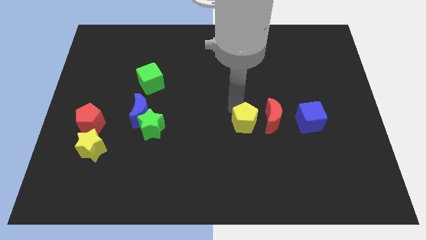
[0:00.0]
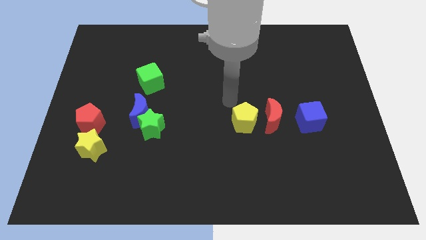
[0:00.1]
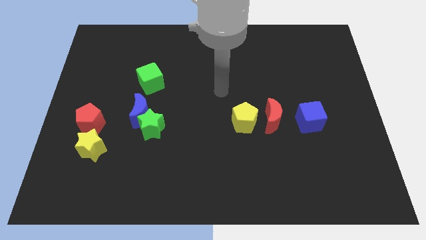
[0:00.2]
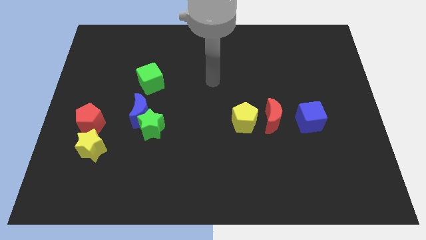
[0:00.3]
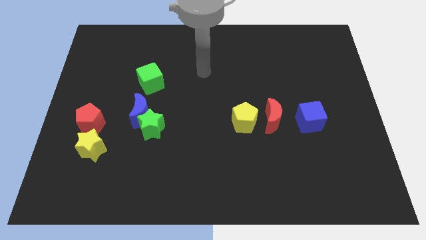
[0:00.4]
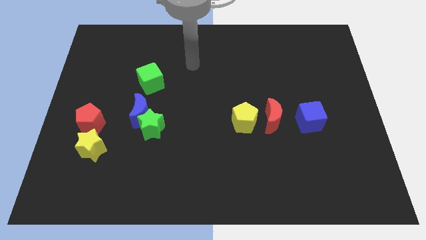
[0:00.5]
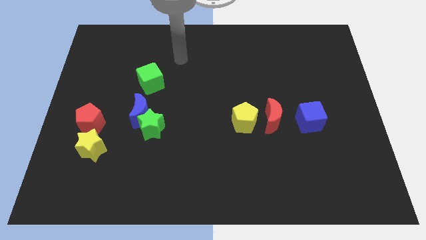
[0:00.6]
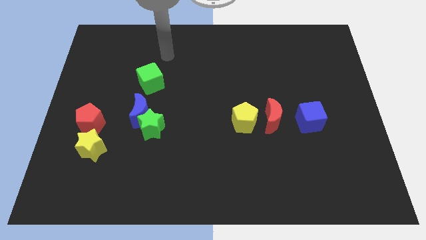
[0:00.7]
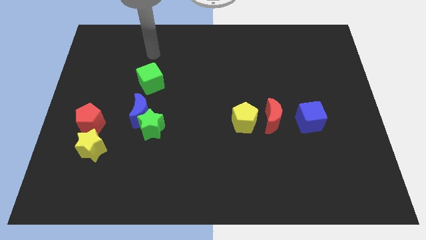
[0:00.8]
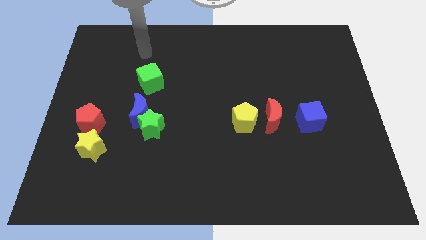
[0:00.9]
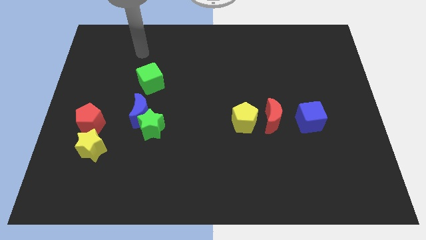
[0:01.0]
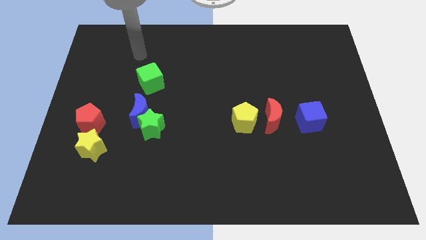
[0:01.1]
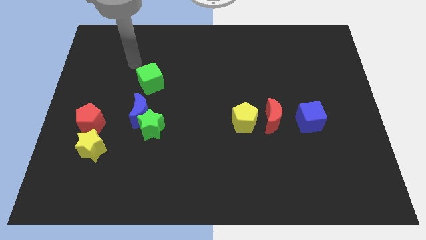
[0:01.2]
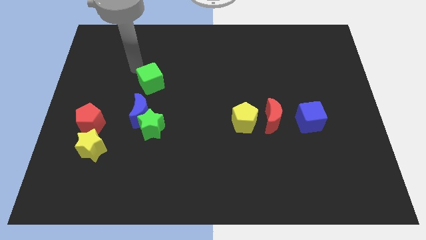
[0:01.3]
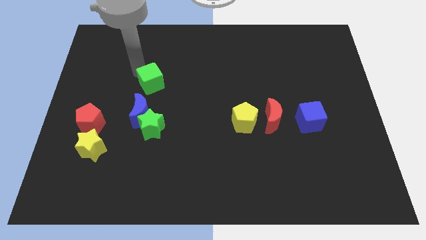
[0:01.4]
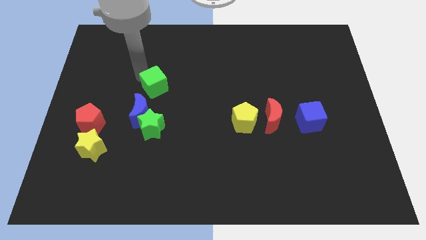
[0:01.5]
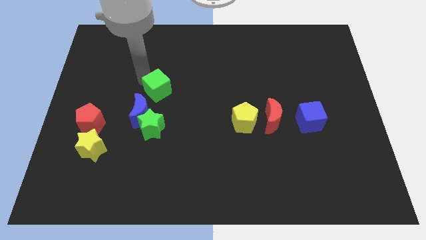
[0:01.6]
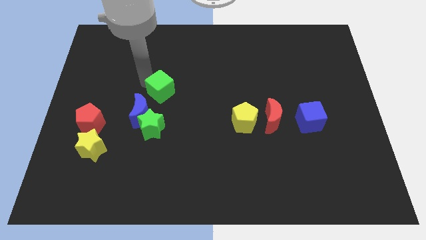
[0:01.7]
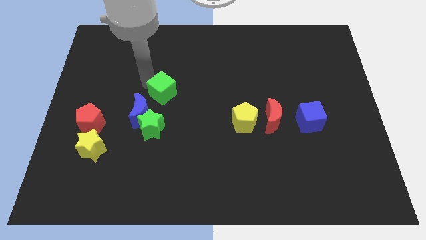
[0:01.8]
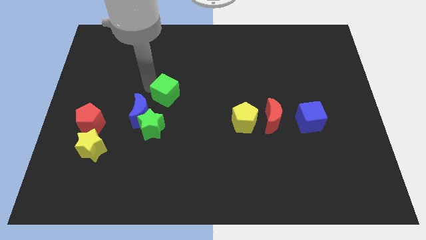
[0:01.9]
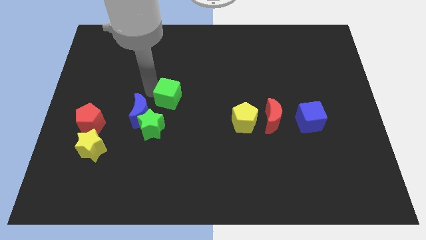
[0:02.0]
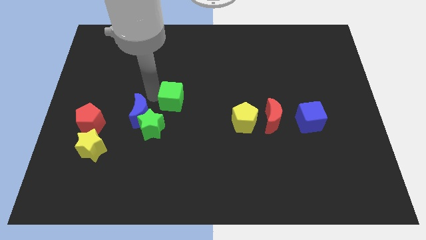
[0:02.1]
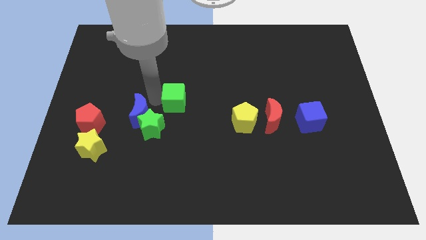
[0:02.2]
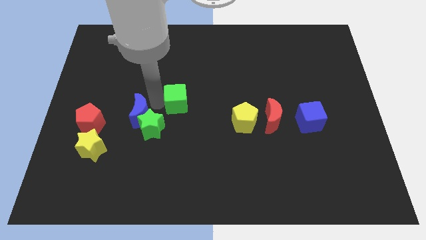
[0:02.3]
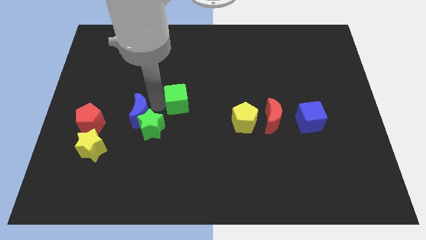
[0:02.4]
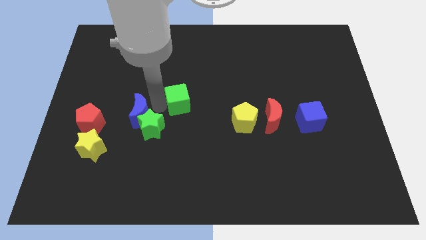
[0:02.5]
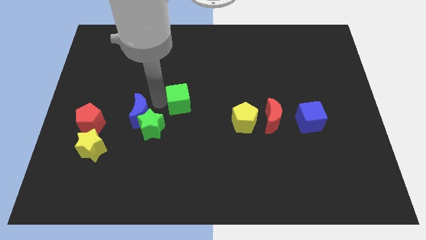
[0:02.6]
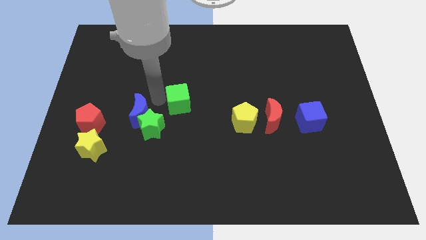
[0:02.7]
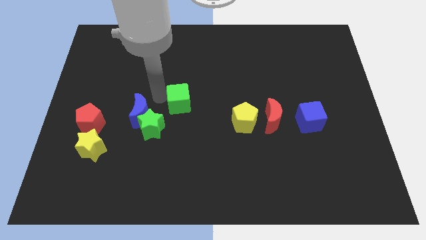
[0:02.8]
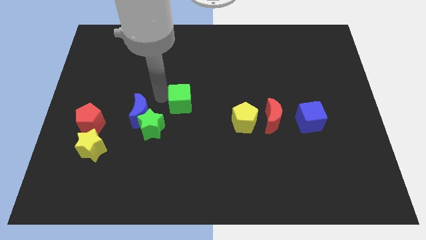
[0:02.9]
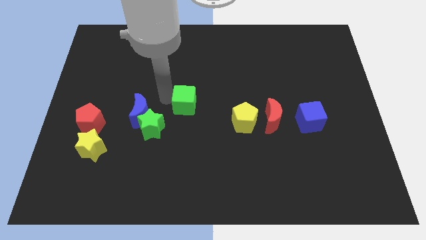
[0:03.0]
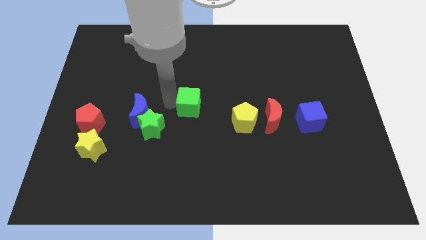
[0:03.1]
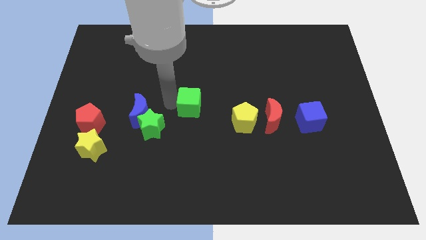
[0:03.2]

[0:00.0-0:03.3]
push the green cube to the right of the blue crescent

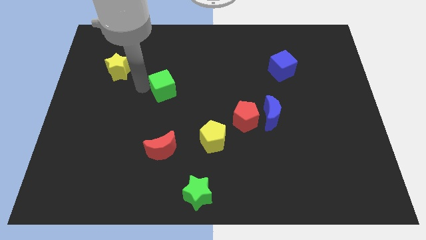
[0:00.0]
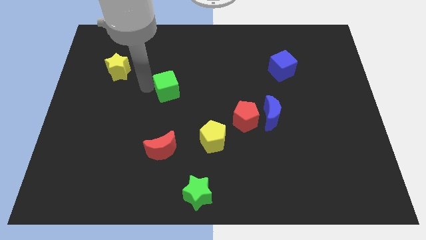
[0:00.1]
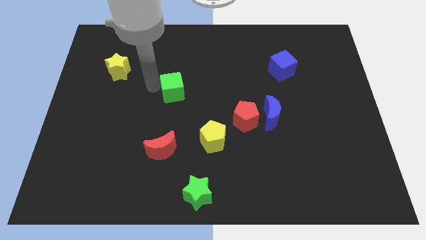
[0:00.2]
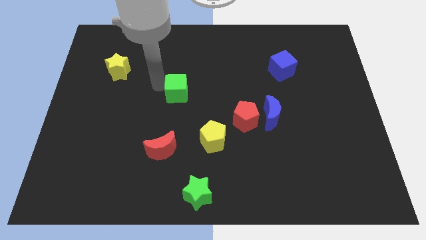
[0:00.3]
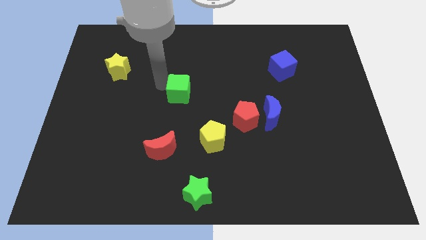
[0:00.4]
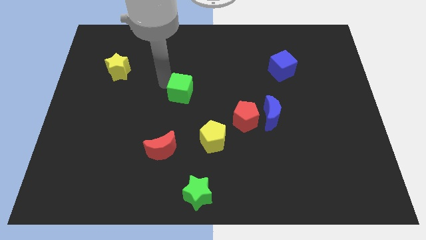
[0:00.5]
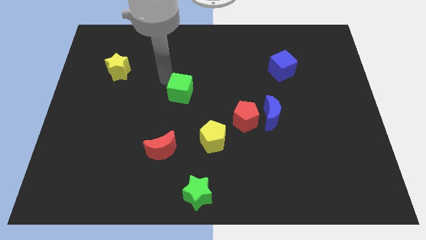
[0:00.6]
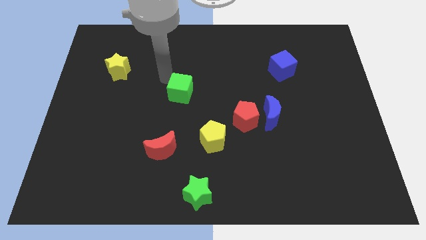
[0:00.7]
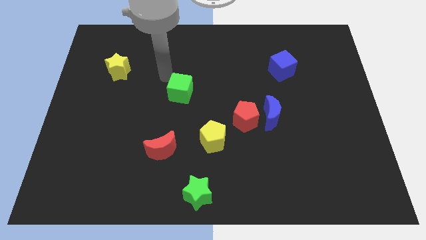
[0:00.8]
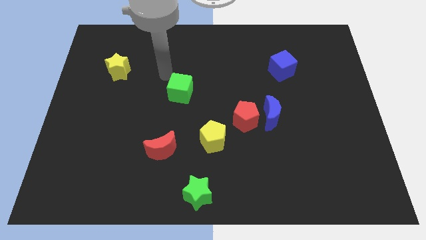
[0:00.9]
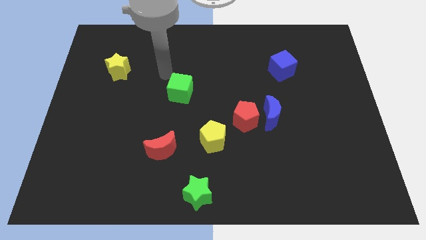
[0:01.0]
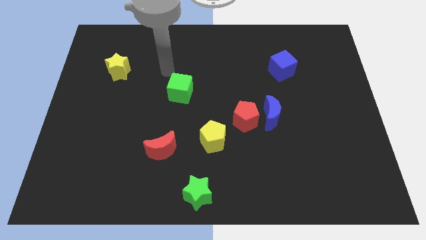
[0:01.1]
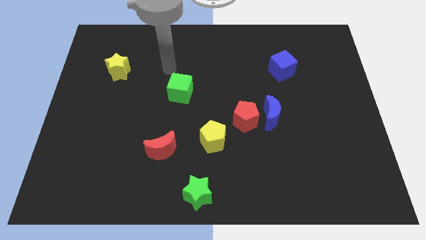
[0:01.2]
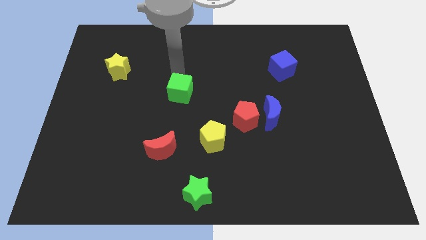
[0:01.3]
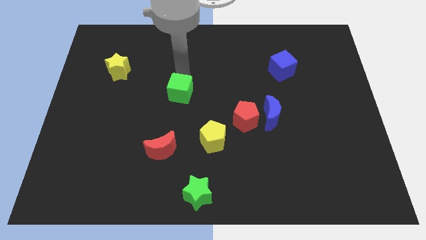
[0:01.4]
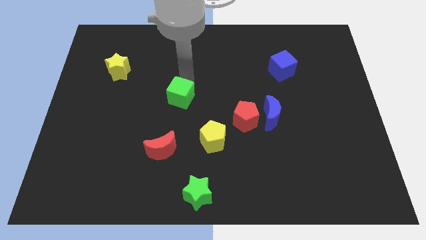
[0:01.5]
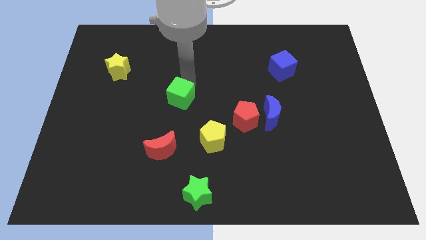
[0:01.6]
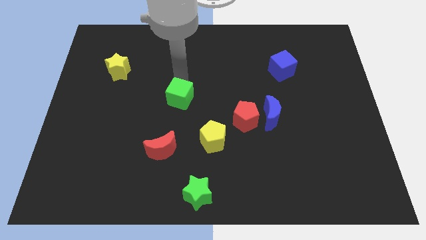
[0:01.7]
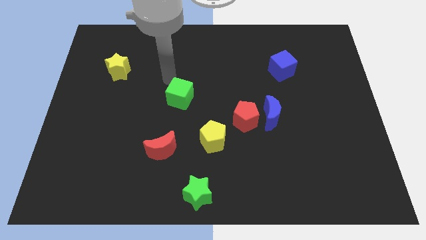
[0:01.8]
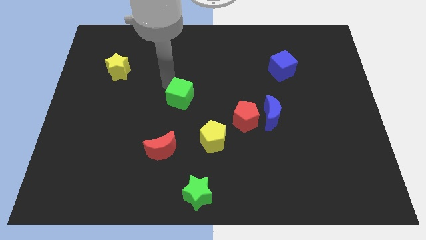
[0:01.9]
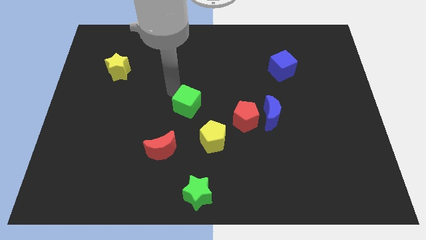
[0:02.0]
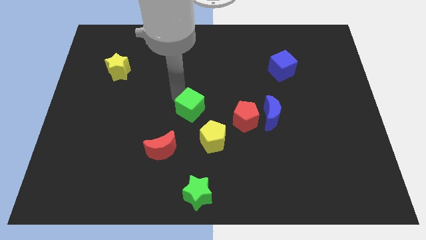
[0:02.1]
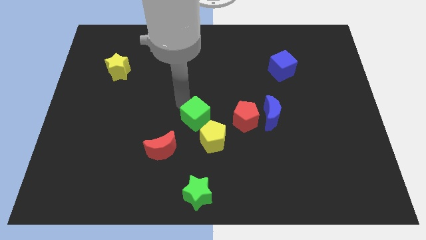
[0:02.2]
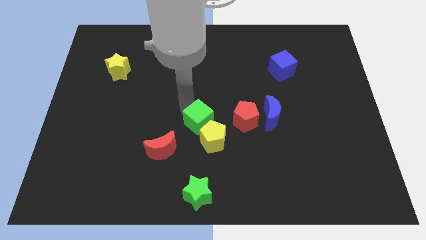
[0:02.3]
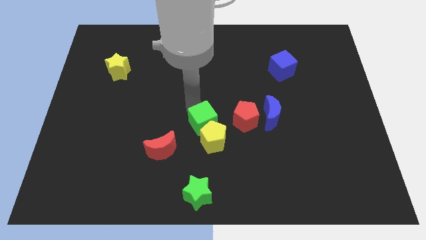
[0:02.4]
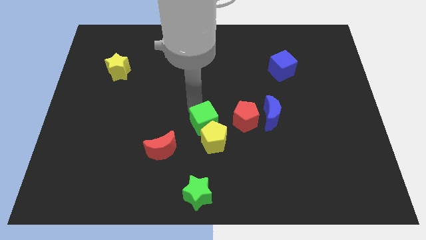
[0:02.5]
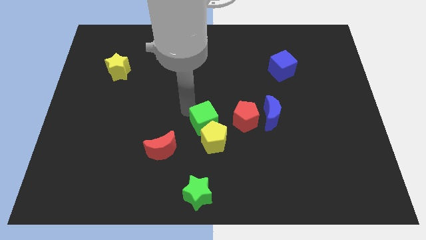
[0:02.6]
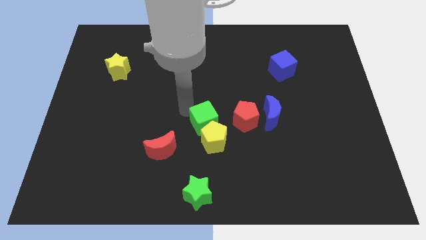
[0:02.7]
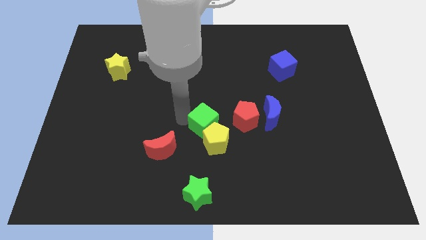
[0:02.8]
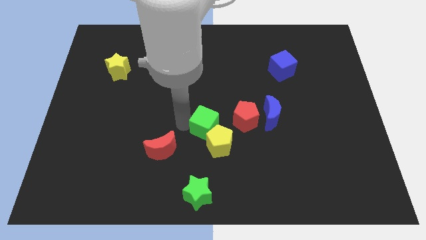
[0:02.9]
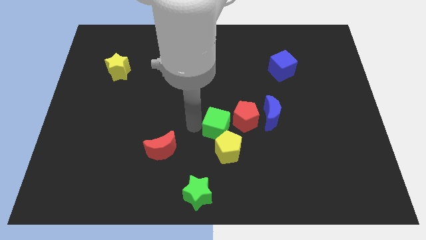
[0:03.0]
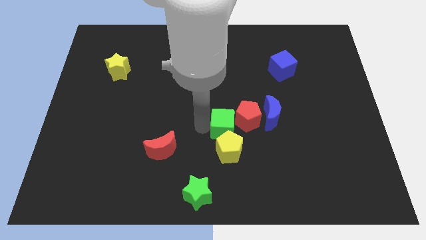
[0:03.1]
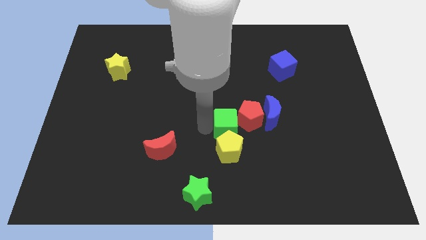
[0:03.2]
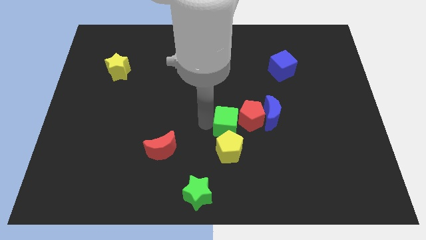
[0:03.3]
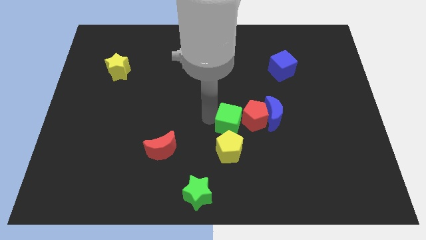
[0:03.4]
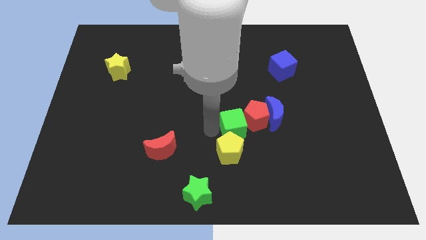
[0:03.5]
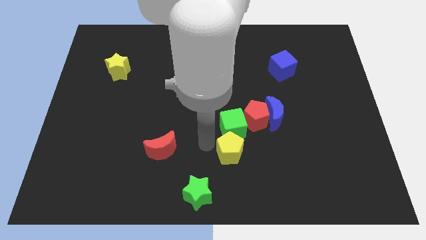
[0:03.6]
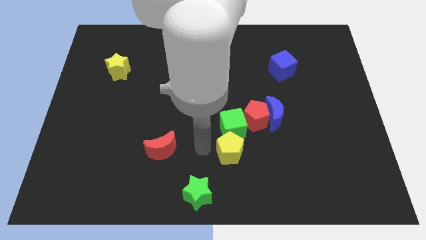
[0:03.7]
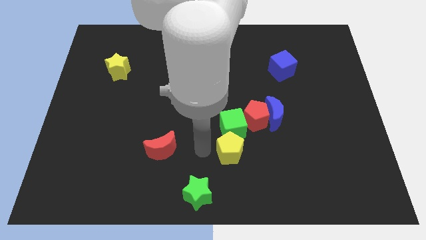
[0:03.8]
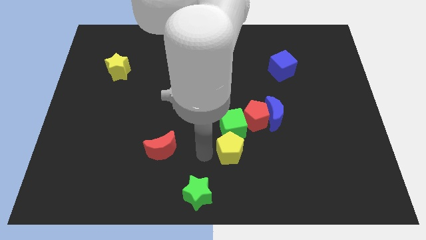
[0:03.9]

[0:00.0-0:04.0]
move the green cube into the group of blocks

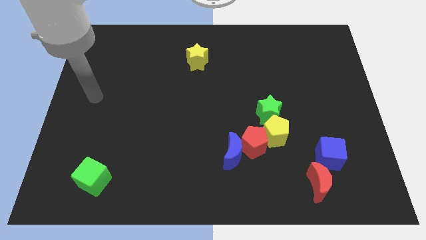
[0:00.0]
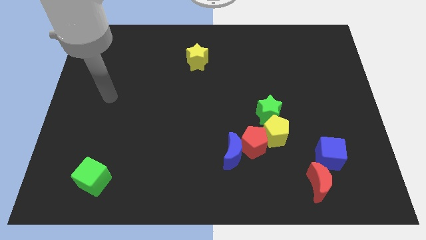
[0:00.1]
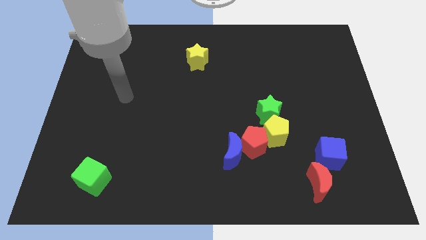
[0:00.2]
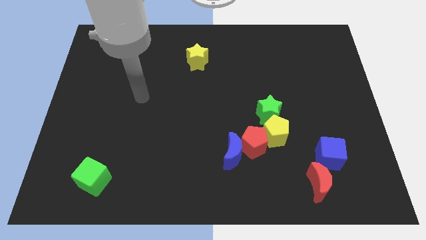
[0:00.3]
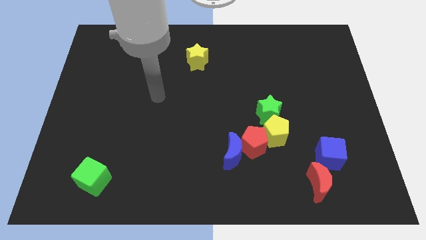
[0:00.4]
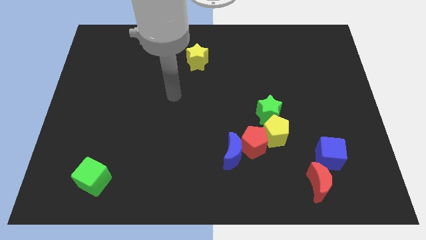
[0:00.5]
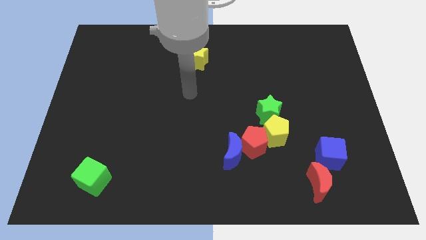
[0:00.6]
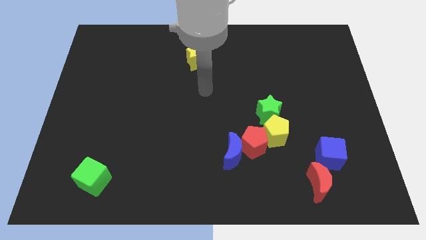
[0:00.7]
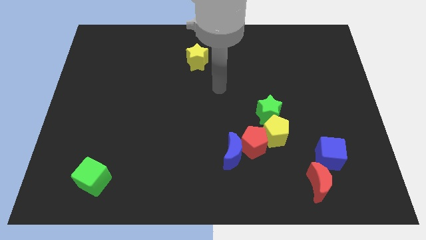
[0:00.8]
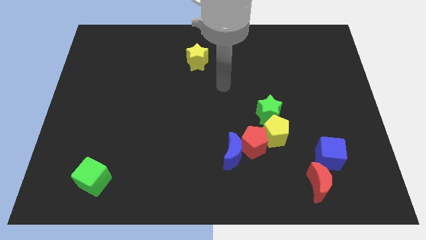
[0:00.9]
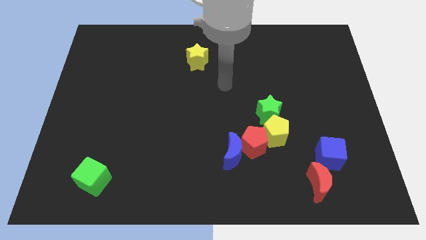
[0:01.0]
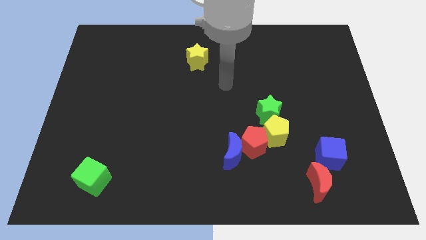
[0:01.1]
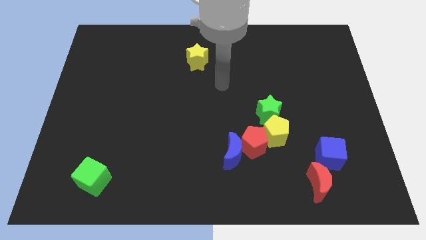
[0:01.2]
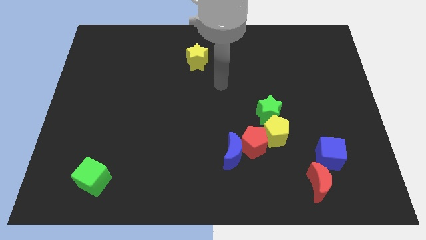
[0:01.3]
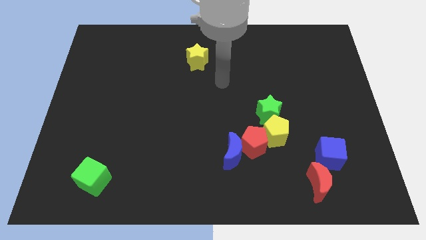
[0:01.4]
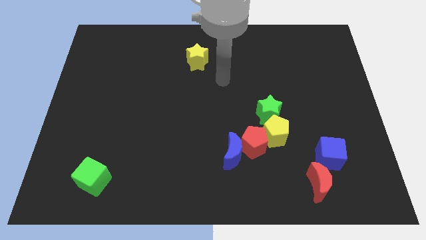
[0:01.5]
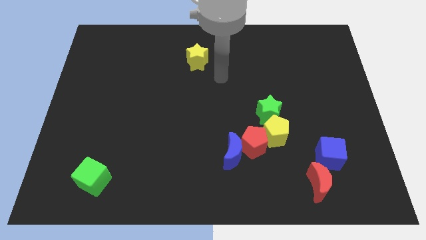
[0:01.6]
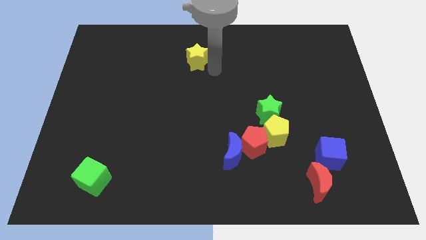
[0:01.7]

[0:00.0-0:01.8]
place the arm near the yellow star
